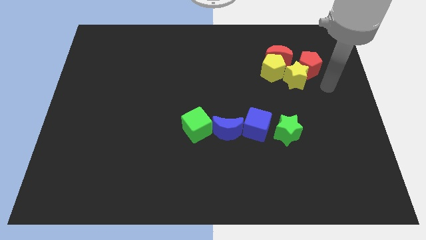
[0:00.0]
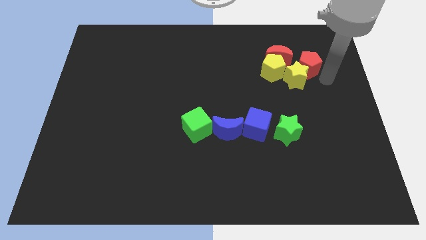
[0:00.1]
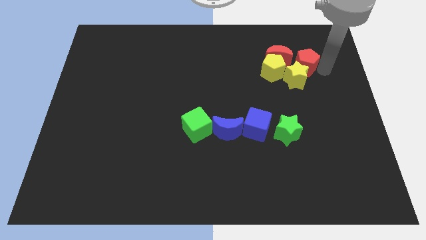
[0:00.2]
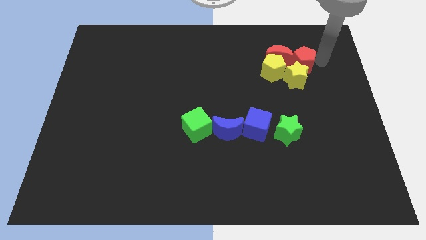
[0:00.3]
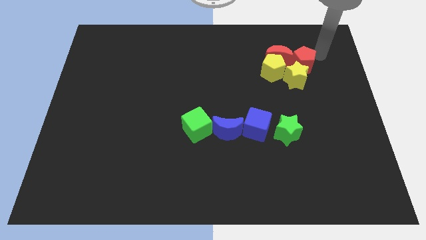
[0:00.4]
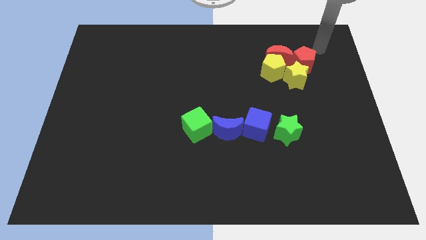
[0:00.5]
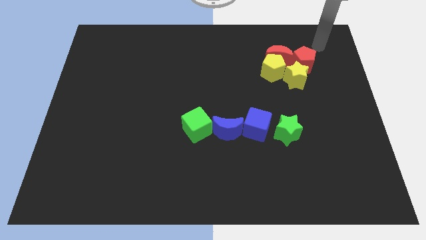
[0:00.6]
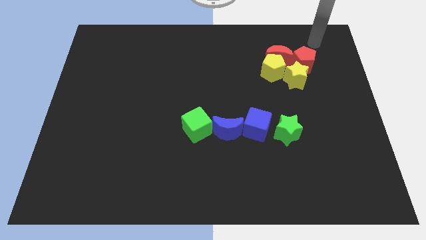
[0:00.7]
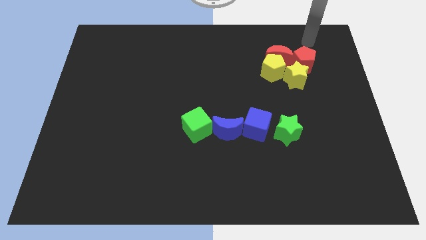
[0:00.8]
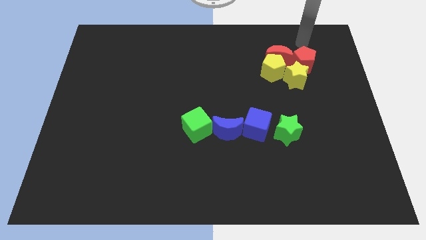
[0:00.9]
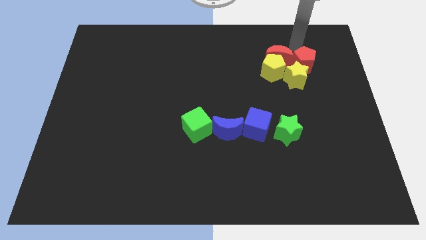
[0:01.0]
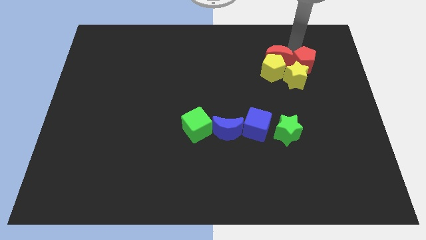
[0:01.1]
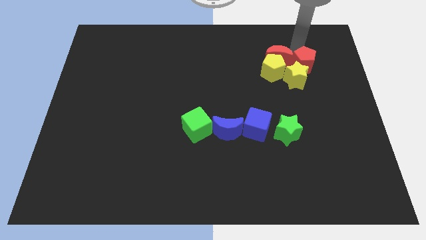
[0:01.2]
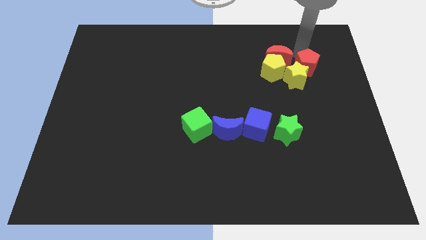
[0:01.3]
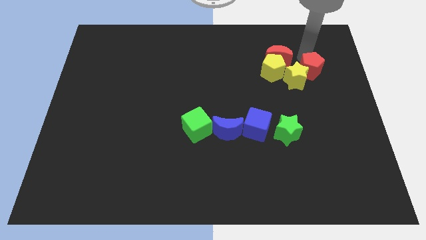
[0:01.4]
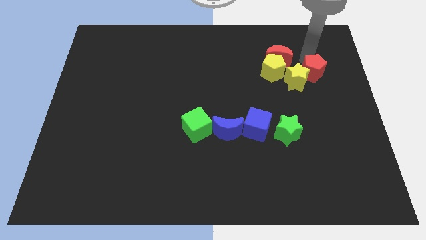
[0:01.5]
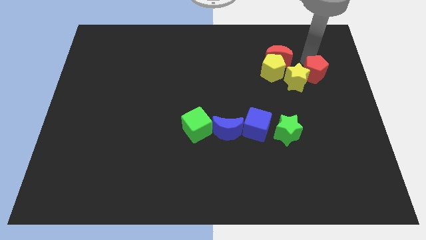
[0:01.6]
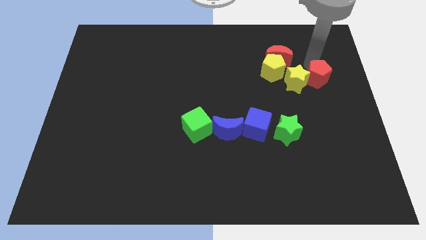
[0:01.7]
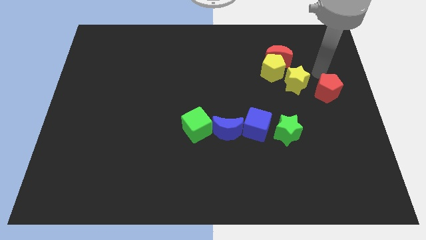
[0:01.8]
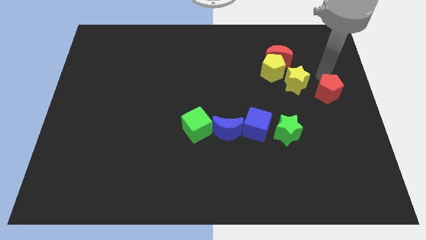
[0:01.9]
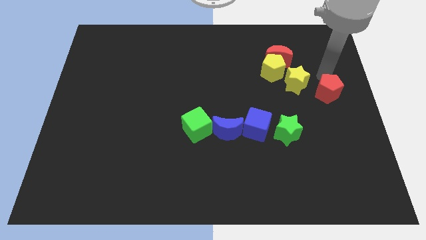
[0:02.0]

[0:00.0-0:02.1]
separate red pentagon from the red moon

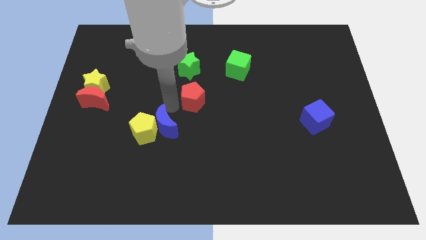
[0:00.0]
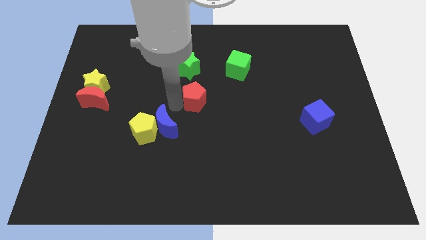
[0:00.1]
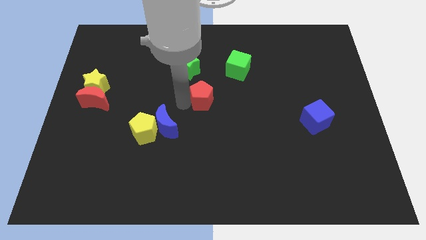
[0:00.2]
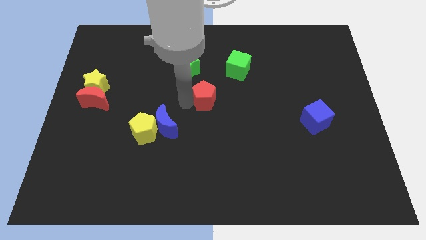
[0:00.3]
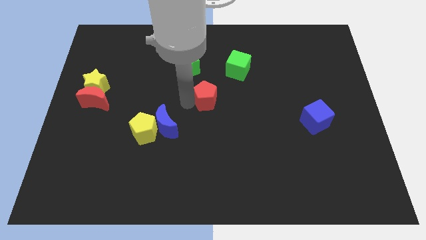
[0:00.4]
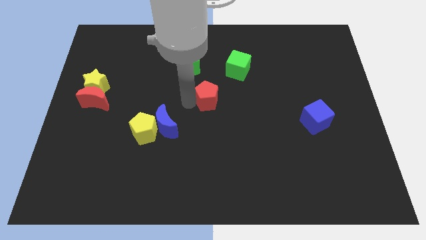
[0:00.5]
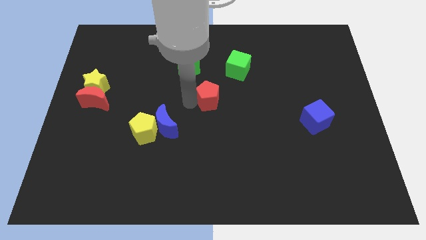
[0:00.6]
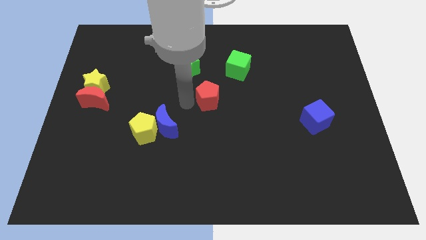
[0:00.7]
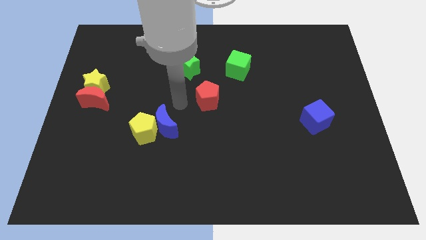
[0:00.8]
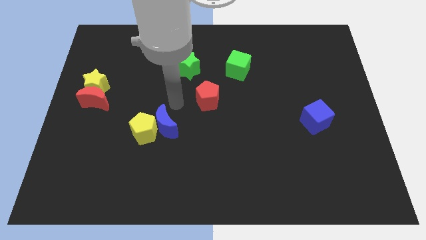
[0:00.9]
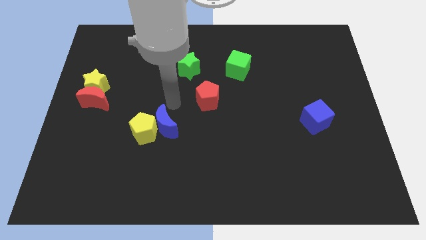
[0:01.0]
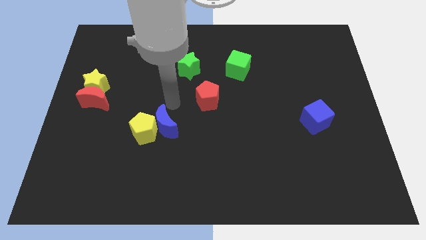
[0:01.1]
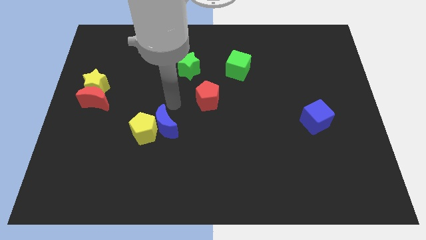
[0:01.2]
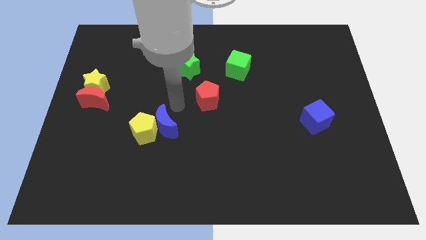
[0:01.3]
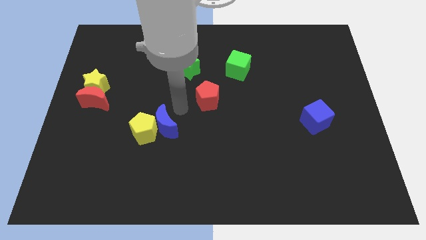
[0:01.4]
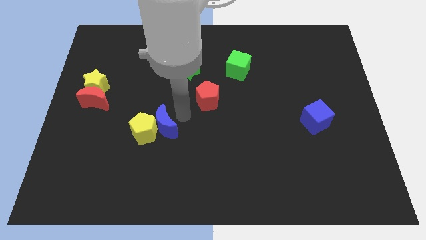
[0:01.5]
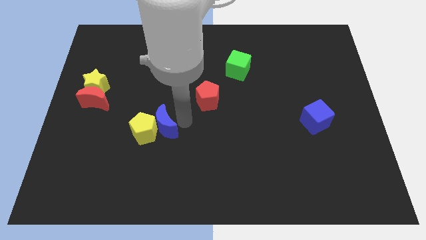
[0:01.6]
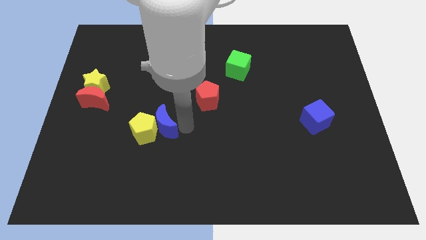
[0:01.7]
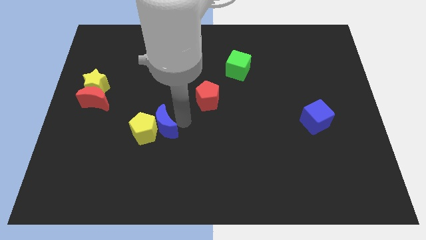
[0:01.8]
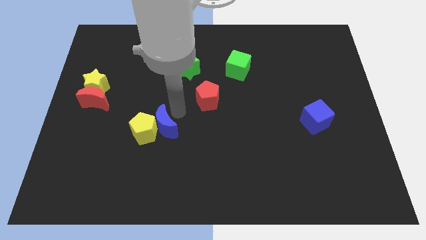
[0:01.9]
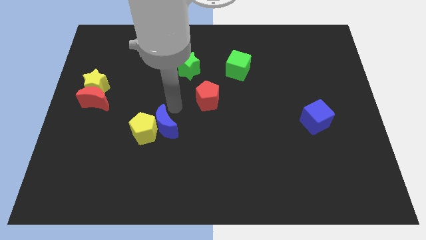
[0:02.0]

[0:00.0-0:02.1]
move the red pentagon to the bottom right of the green star

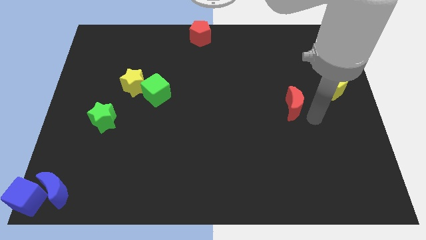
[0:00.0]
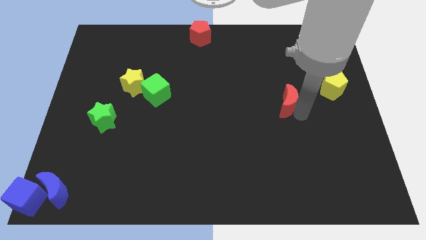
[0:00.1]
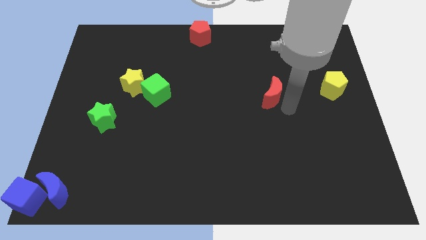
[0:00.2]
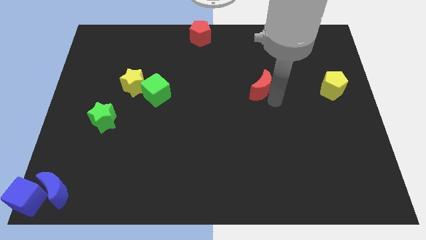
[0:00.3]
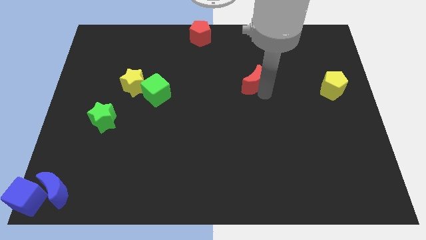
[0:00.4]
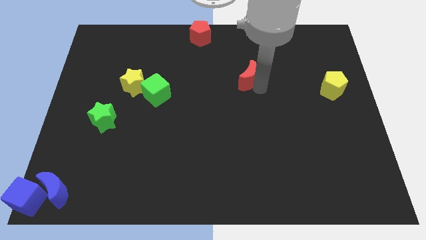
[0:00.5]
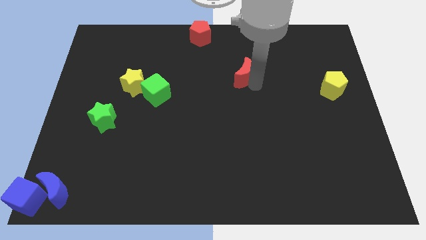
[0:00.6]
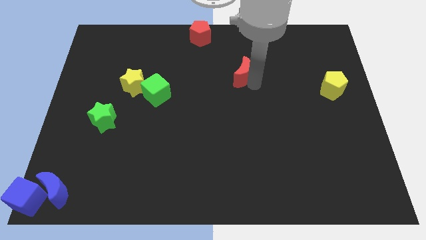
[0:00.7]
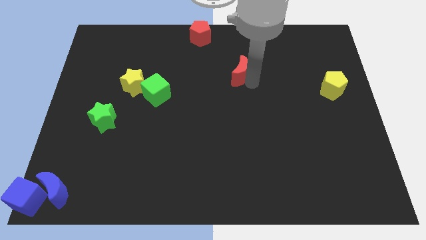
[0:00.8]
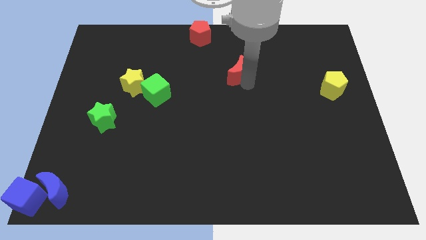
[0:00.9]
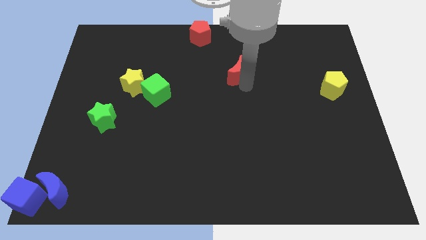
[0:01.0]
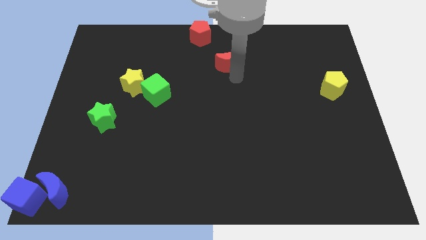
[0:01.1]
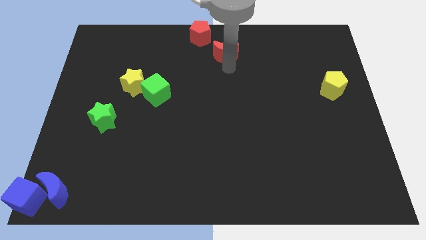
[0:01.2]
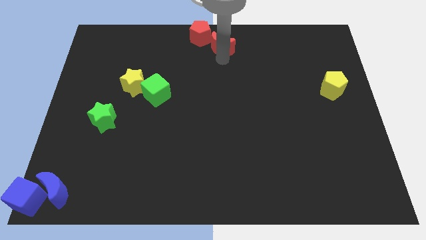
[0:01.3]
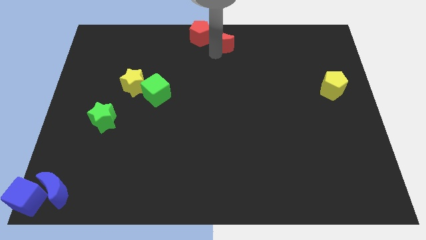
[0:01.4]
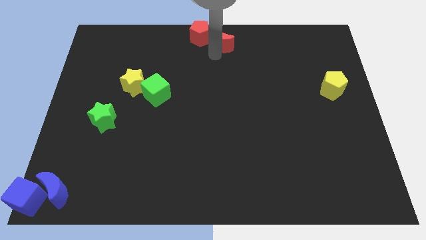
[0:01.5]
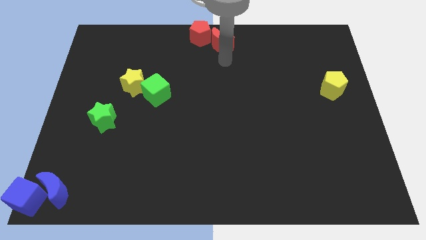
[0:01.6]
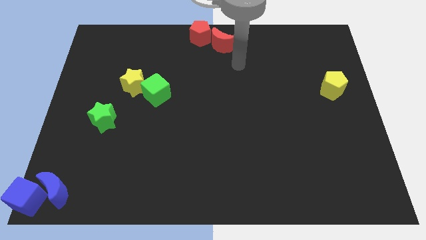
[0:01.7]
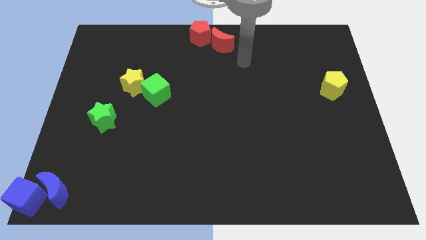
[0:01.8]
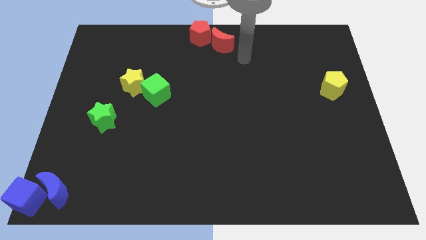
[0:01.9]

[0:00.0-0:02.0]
slide the red moon to the bottom right of the red pentagon

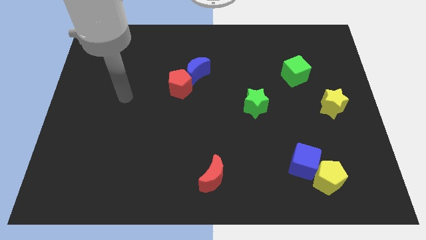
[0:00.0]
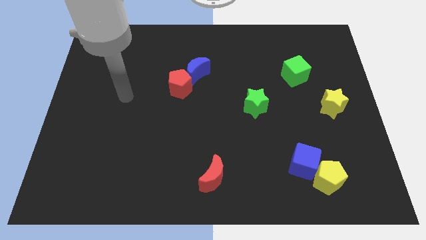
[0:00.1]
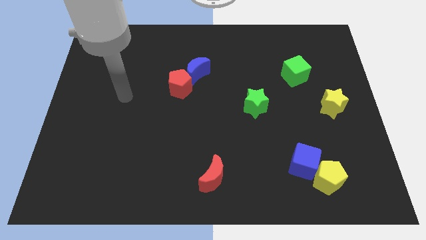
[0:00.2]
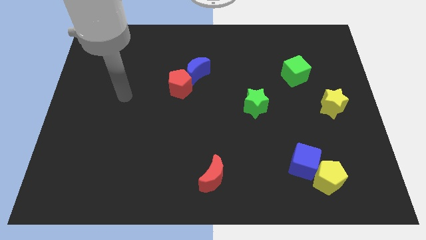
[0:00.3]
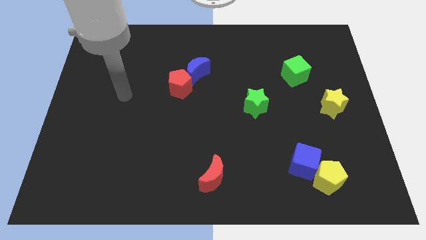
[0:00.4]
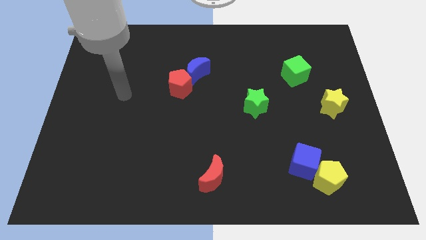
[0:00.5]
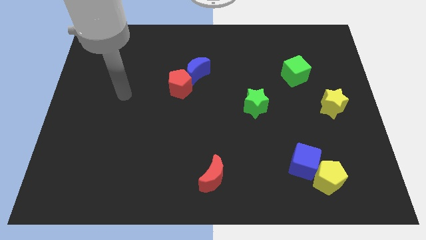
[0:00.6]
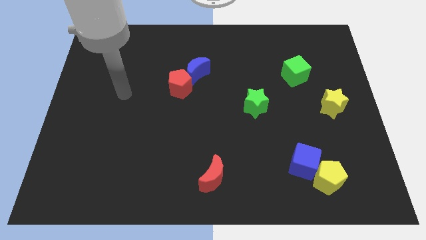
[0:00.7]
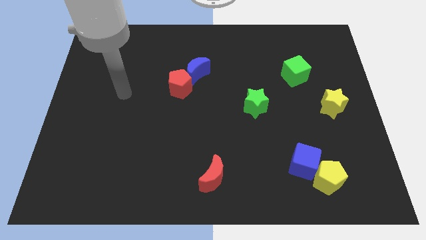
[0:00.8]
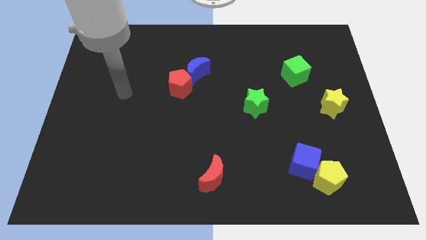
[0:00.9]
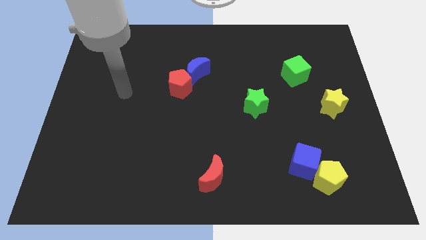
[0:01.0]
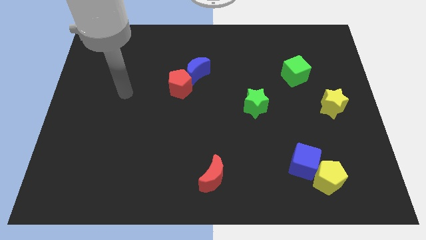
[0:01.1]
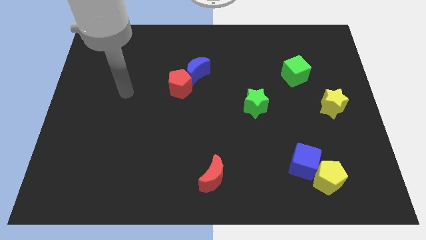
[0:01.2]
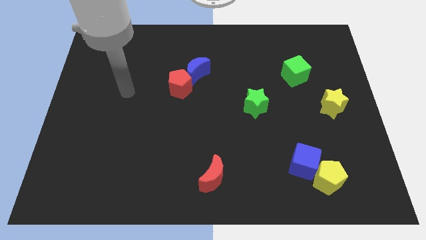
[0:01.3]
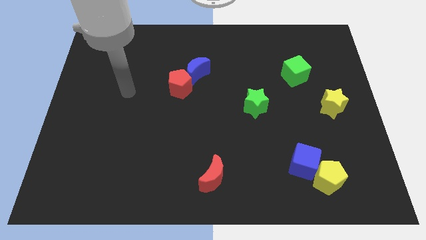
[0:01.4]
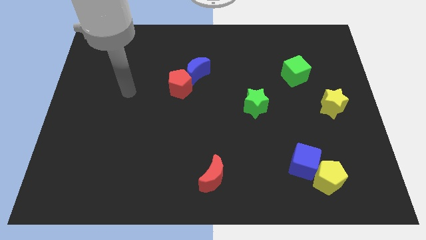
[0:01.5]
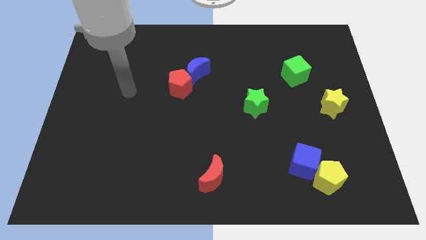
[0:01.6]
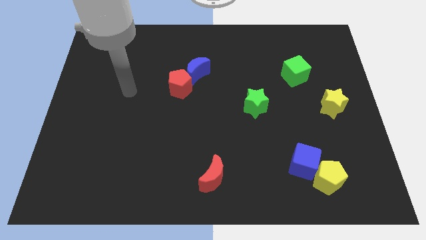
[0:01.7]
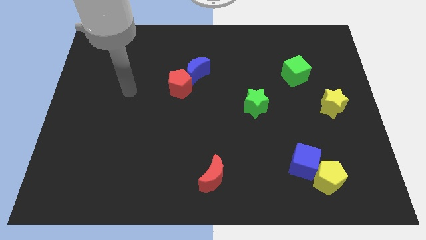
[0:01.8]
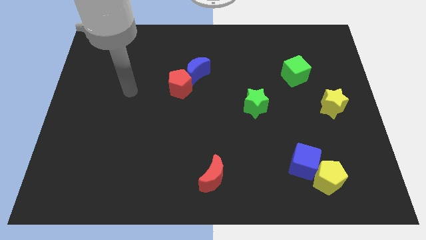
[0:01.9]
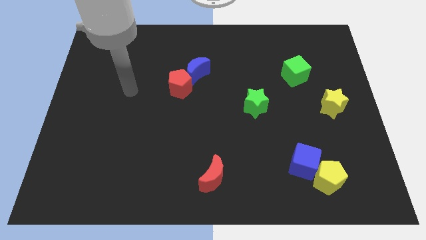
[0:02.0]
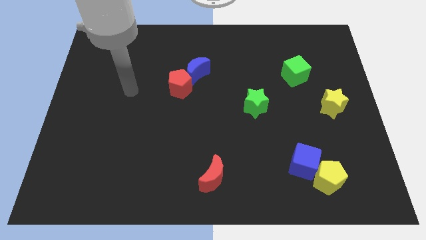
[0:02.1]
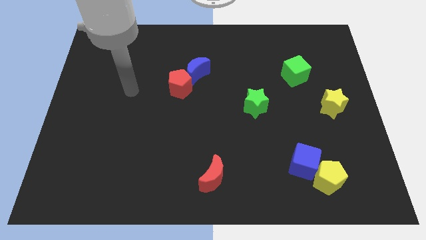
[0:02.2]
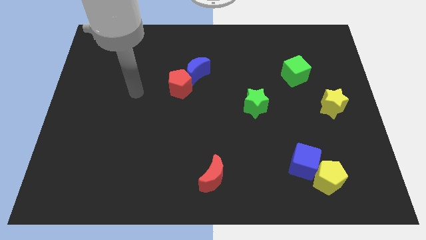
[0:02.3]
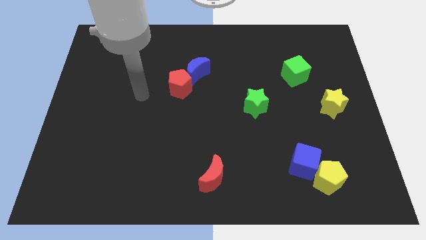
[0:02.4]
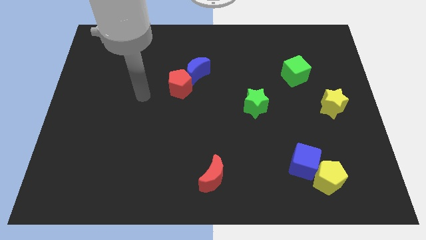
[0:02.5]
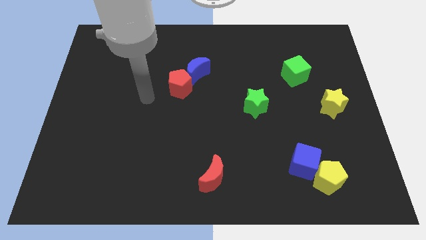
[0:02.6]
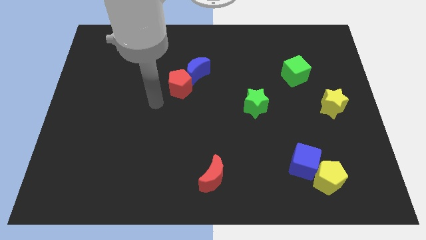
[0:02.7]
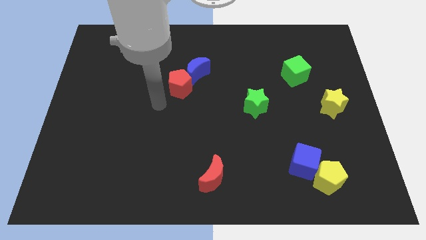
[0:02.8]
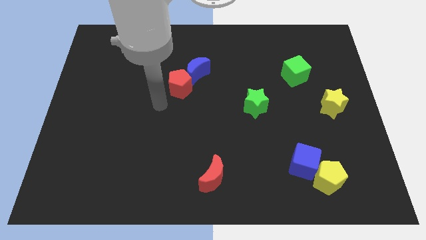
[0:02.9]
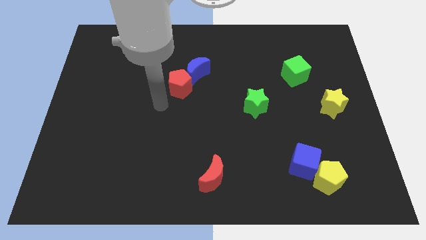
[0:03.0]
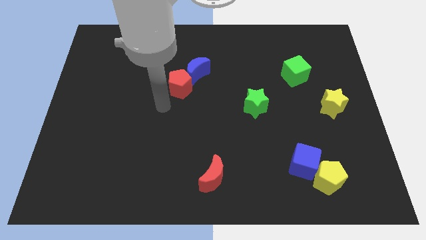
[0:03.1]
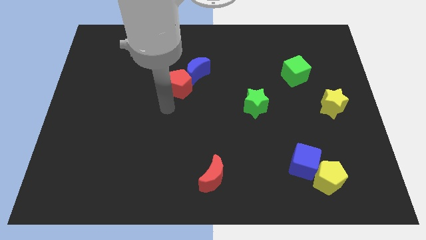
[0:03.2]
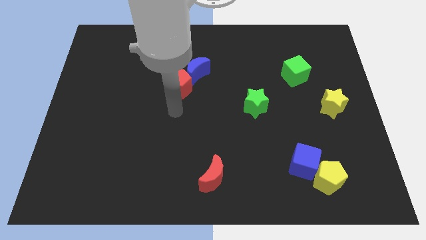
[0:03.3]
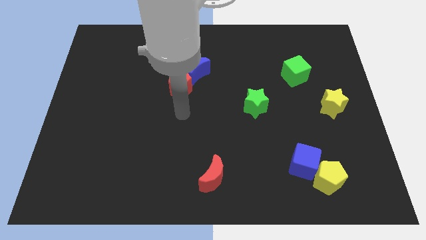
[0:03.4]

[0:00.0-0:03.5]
point your arm below the red pentagon
